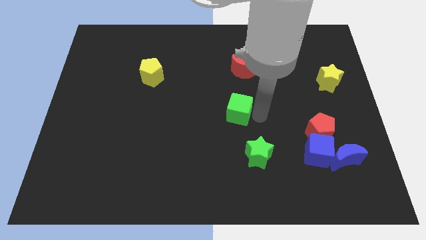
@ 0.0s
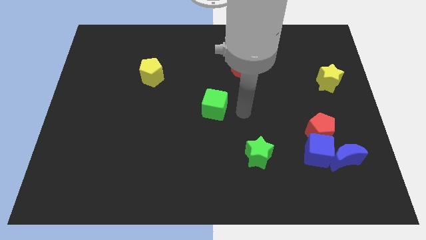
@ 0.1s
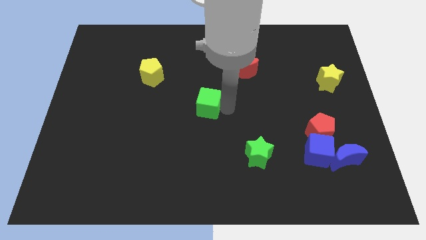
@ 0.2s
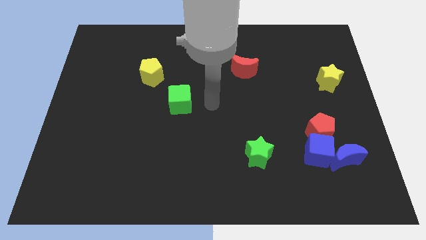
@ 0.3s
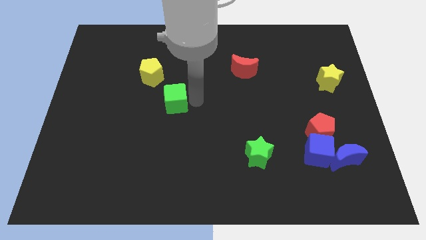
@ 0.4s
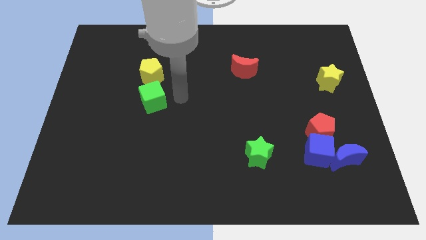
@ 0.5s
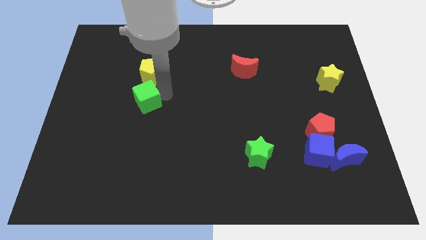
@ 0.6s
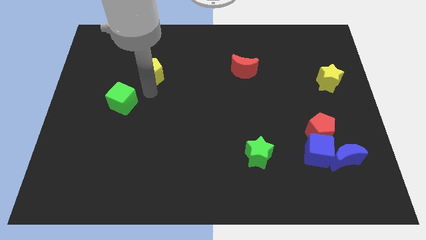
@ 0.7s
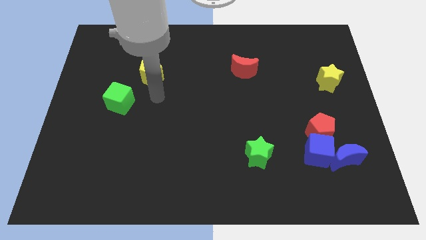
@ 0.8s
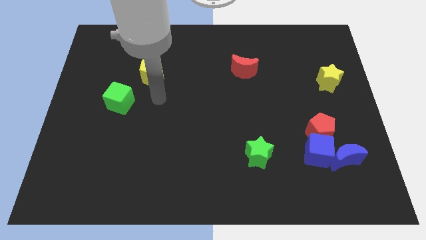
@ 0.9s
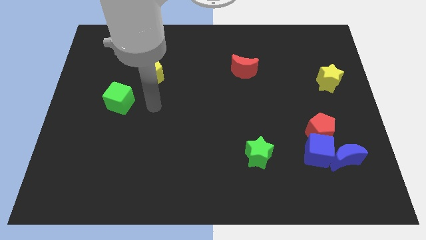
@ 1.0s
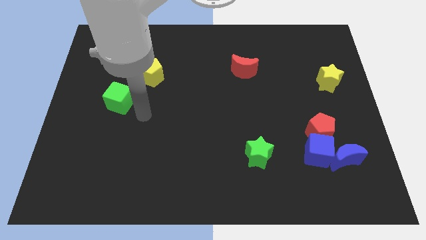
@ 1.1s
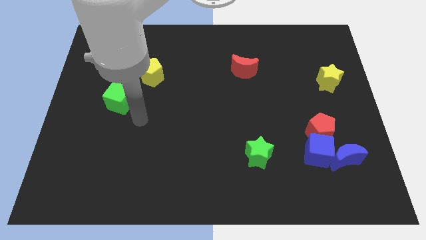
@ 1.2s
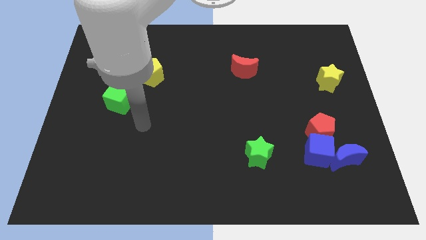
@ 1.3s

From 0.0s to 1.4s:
place the green cube in diagonal position with the yellow pentagon

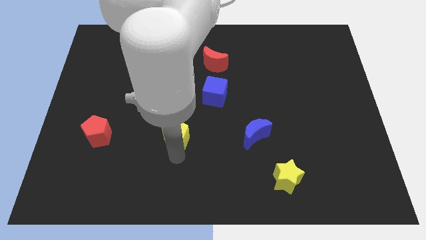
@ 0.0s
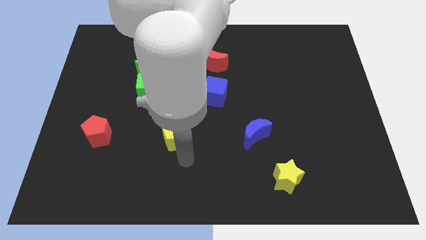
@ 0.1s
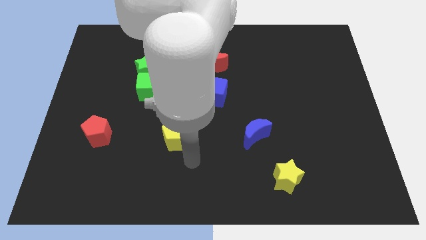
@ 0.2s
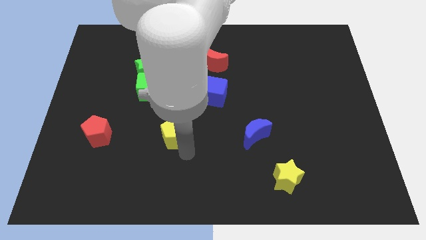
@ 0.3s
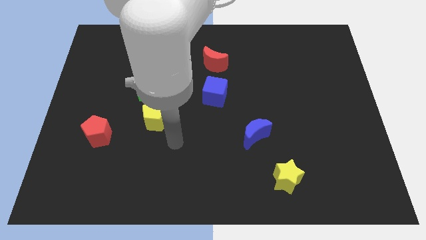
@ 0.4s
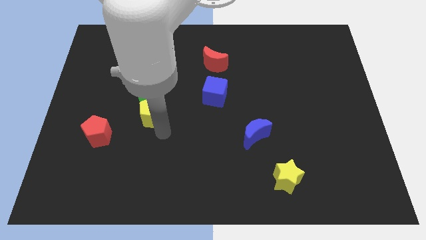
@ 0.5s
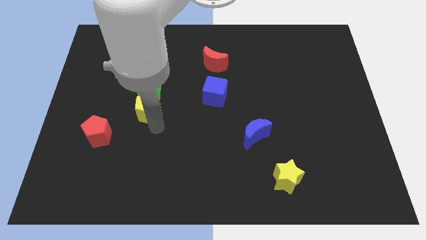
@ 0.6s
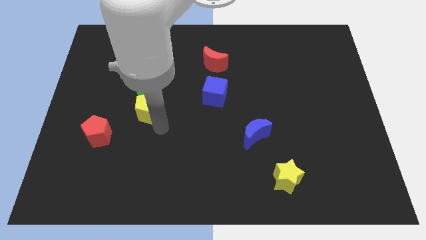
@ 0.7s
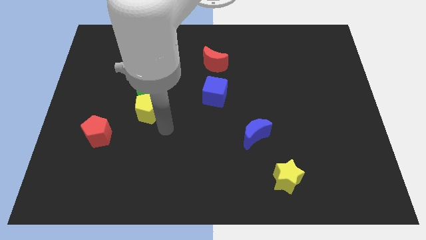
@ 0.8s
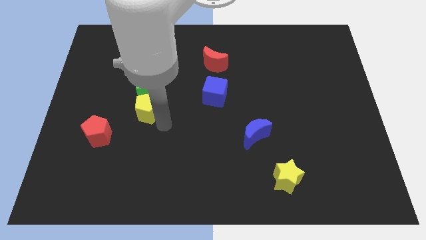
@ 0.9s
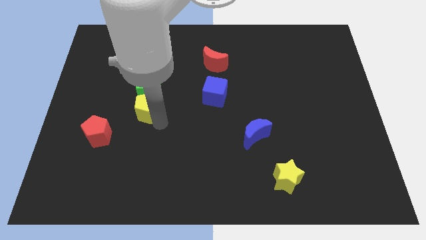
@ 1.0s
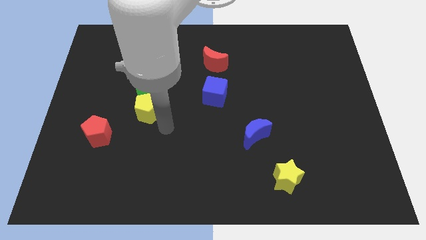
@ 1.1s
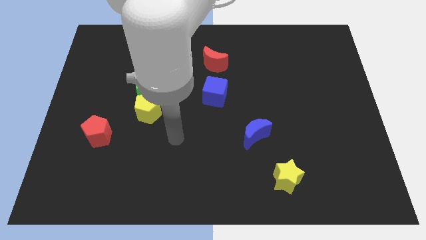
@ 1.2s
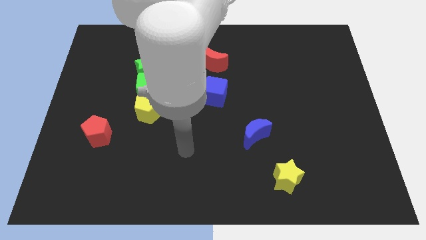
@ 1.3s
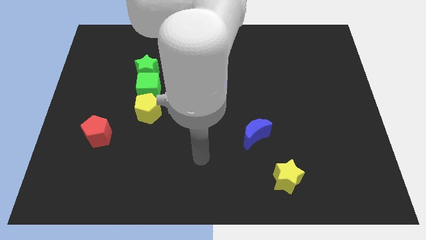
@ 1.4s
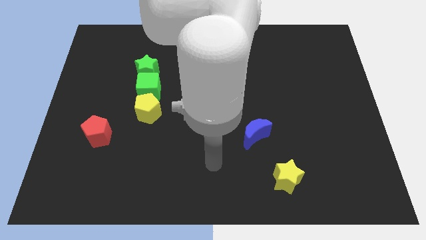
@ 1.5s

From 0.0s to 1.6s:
push the yellow pentagon to the bottom of the green cube

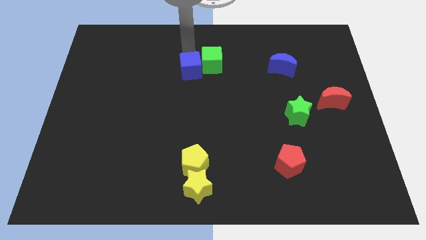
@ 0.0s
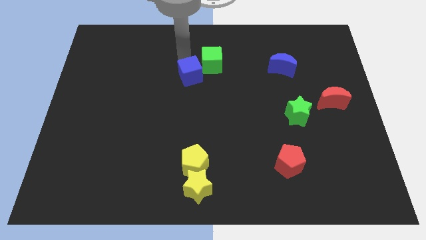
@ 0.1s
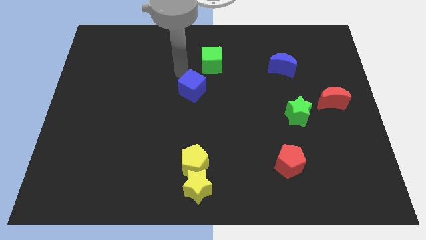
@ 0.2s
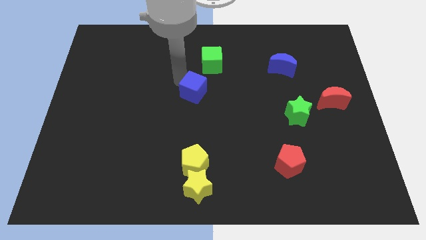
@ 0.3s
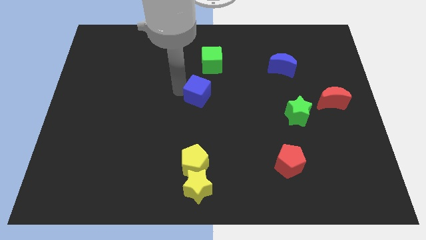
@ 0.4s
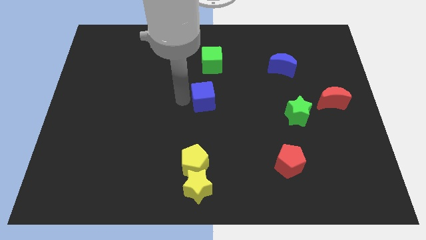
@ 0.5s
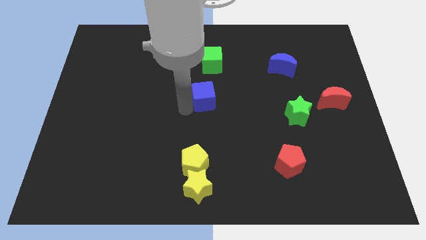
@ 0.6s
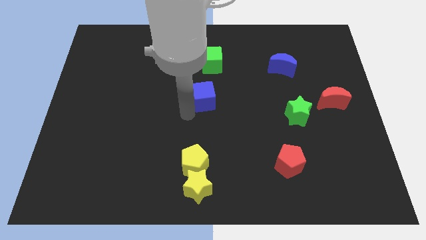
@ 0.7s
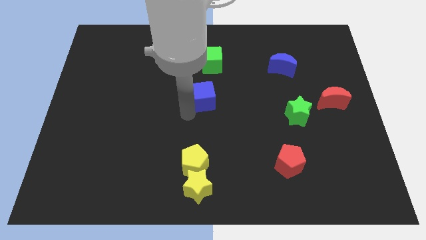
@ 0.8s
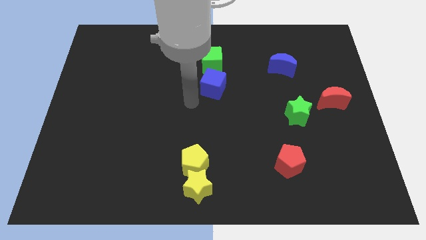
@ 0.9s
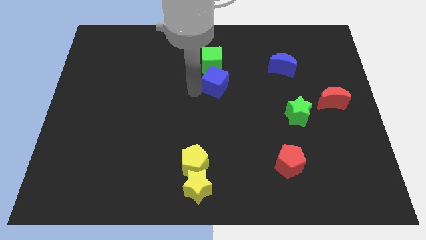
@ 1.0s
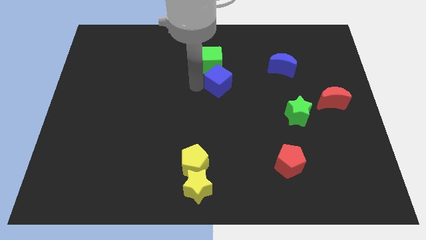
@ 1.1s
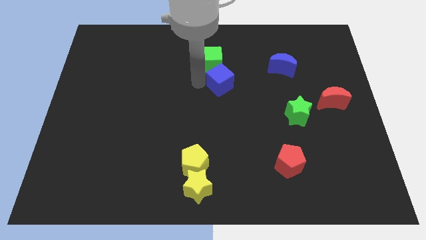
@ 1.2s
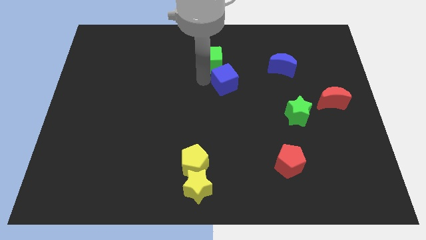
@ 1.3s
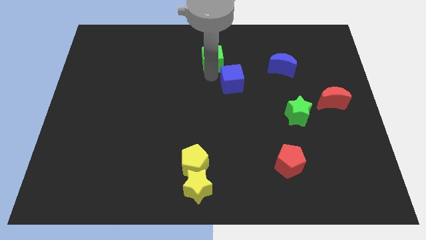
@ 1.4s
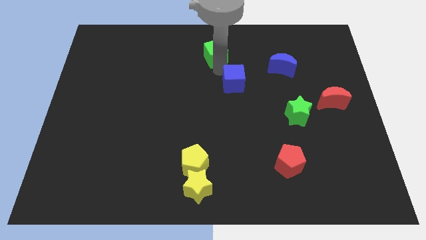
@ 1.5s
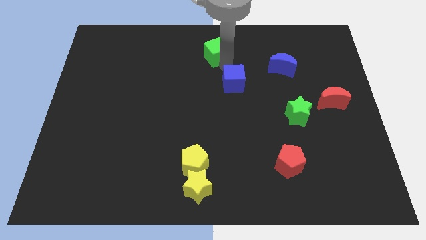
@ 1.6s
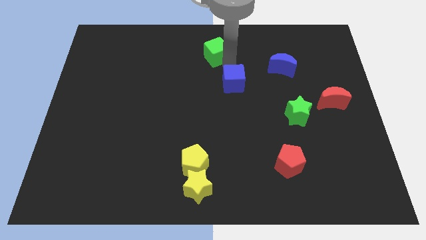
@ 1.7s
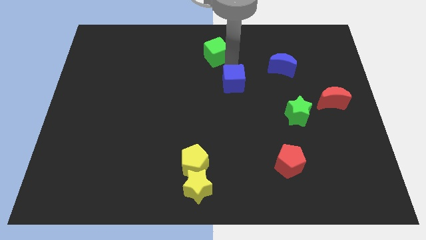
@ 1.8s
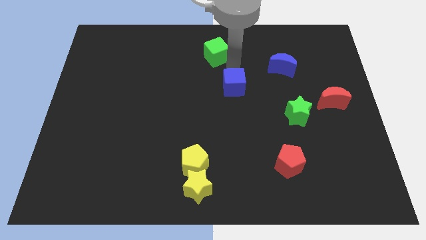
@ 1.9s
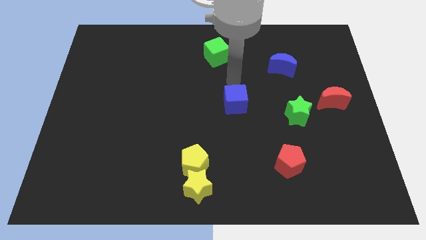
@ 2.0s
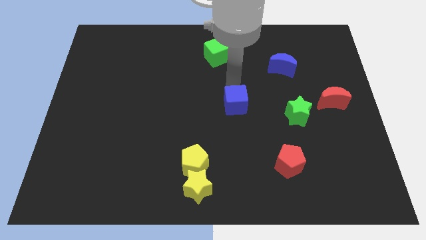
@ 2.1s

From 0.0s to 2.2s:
separate the blue cube from the green cube

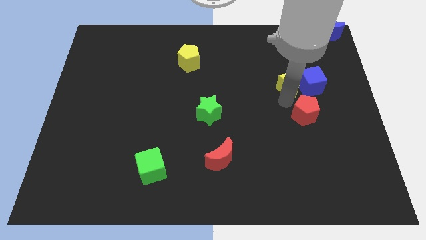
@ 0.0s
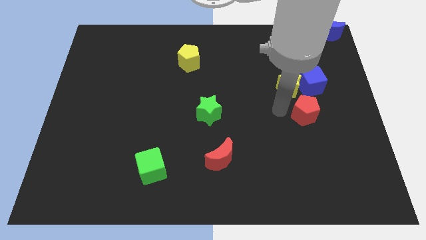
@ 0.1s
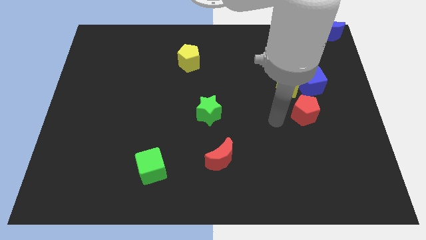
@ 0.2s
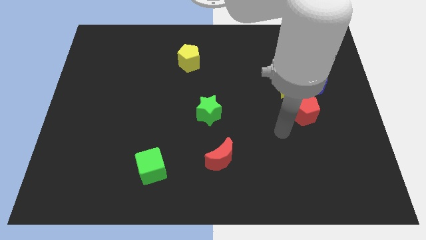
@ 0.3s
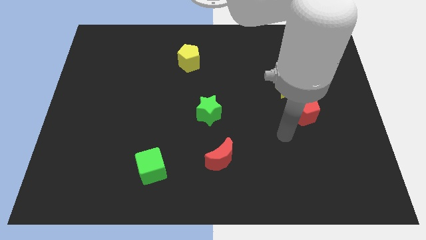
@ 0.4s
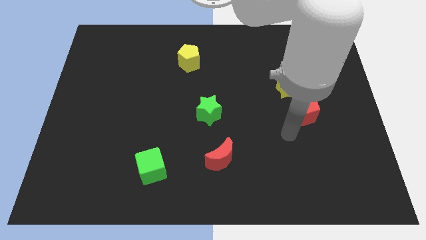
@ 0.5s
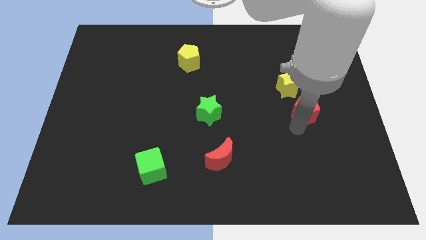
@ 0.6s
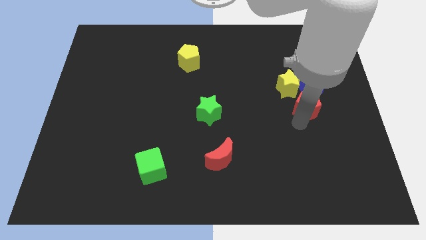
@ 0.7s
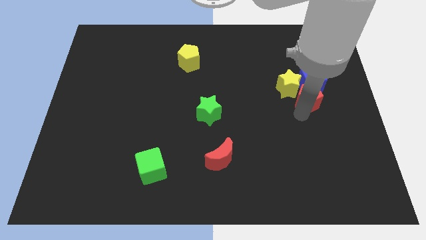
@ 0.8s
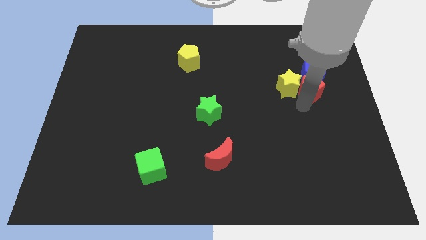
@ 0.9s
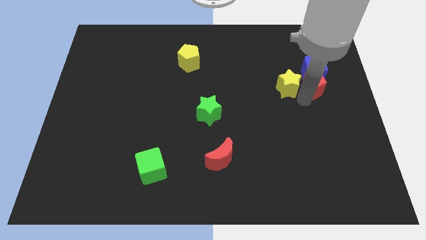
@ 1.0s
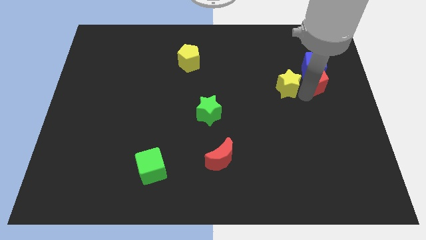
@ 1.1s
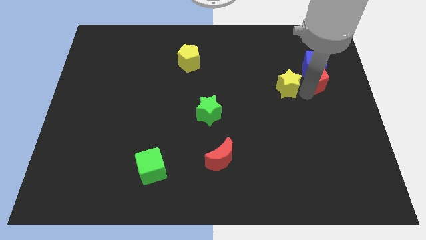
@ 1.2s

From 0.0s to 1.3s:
move blue cube slightly up along with the red pentagon

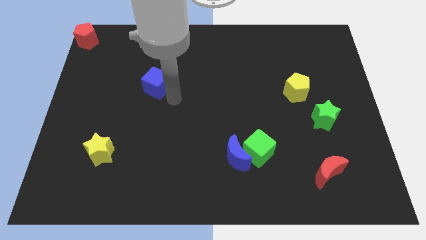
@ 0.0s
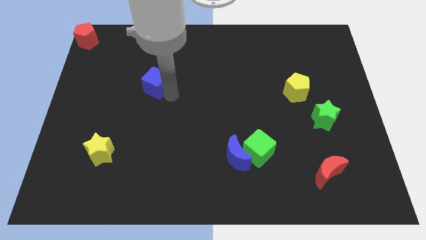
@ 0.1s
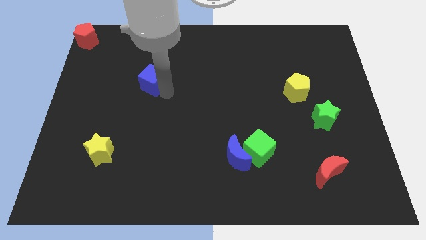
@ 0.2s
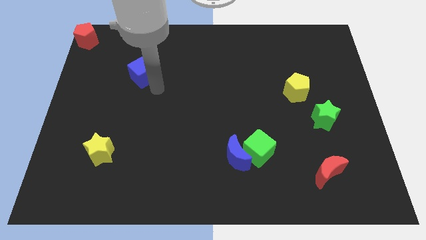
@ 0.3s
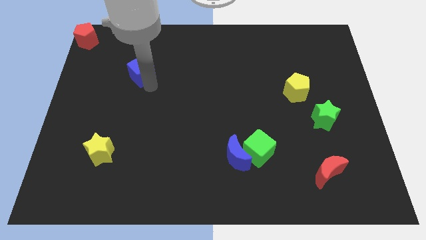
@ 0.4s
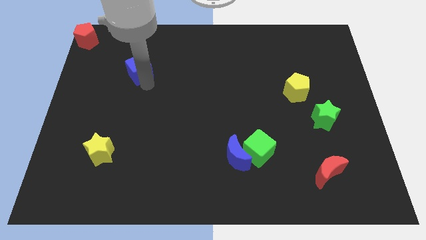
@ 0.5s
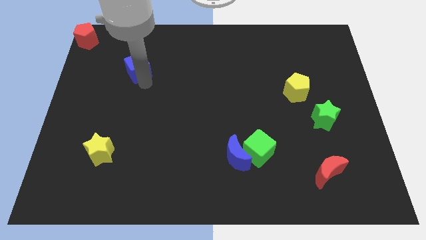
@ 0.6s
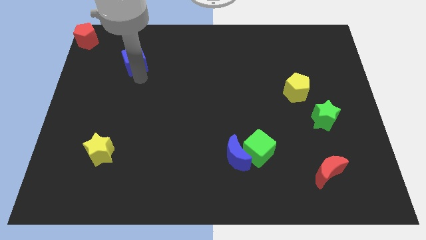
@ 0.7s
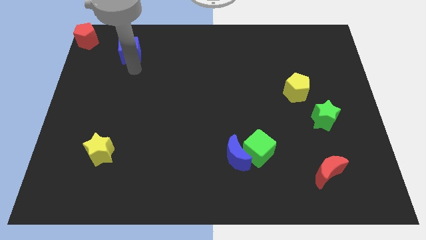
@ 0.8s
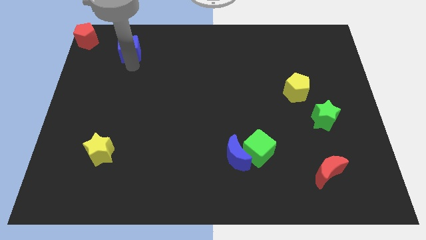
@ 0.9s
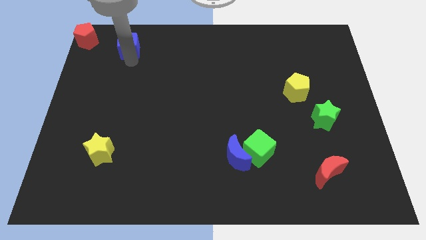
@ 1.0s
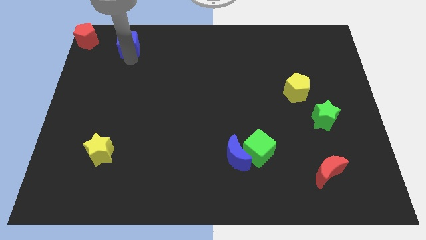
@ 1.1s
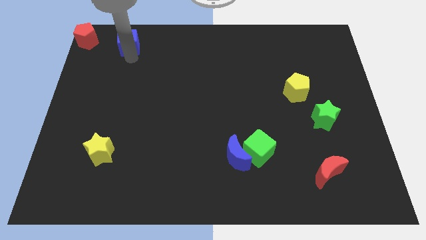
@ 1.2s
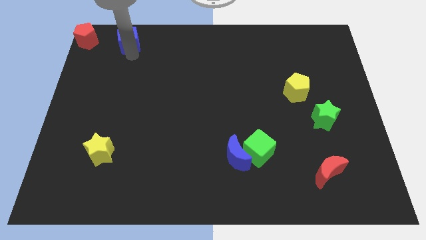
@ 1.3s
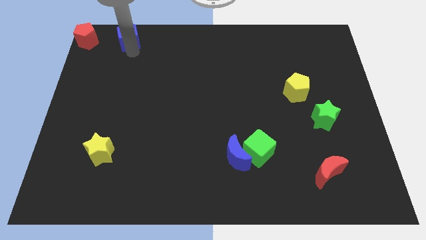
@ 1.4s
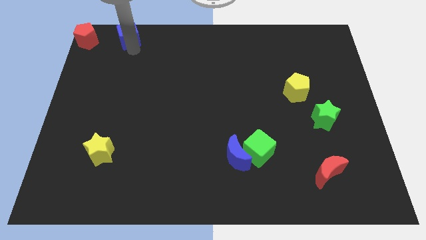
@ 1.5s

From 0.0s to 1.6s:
move blue cube parallel to red pentagon

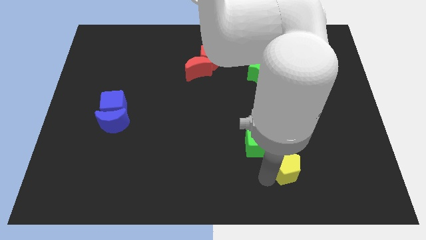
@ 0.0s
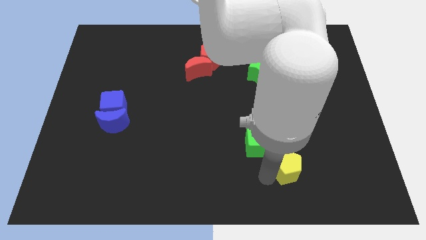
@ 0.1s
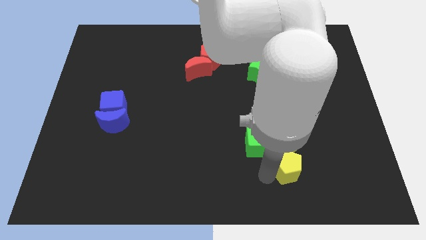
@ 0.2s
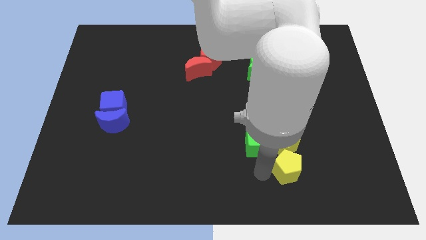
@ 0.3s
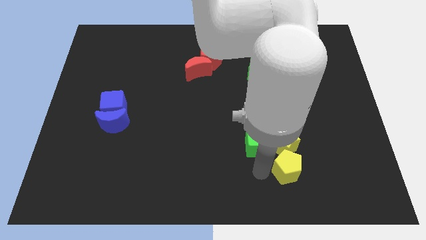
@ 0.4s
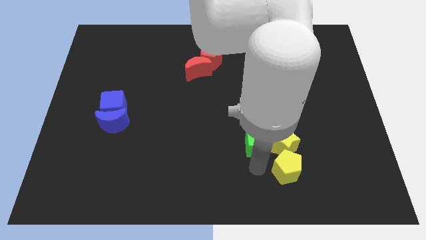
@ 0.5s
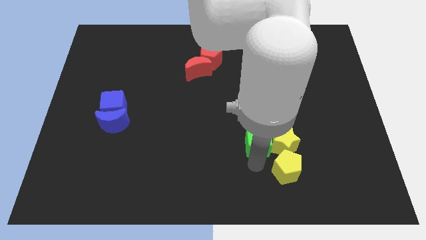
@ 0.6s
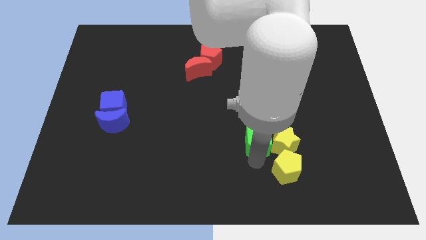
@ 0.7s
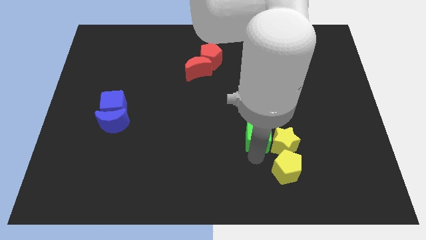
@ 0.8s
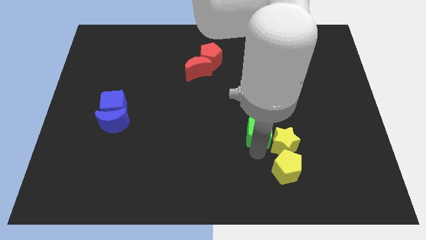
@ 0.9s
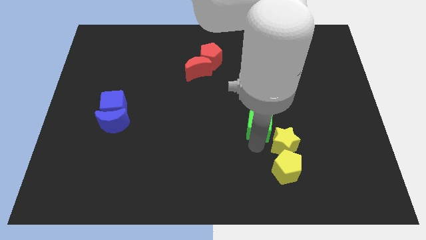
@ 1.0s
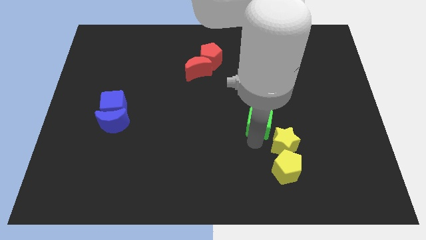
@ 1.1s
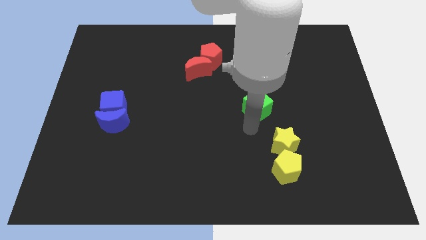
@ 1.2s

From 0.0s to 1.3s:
slide the green cube diagonally top left to the yellow star
